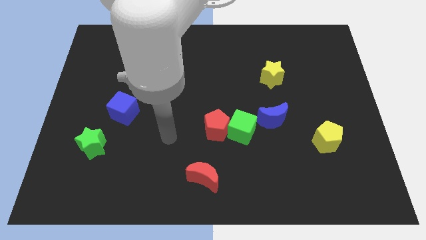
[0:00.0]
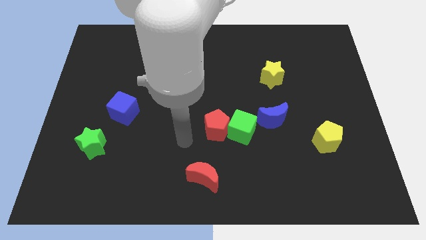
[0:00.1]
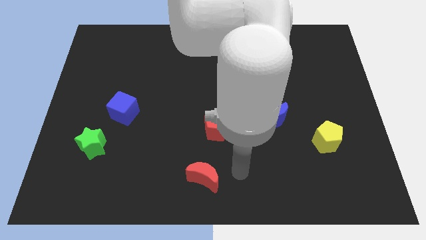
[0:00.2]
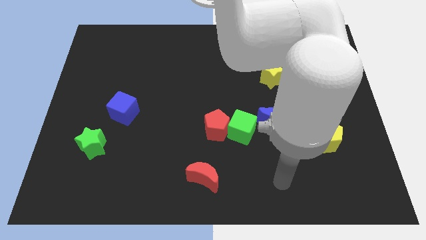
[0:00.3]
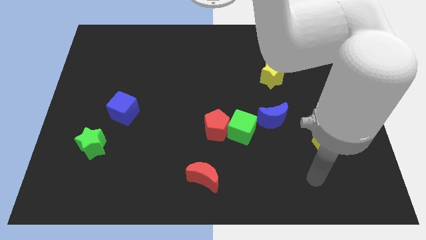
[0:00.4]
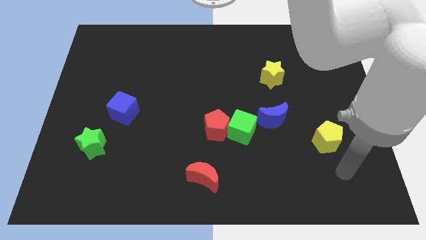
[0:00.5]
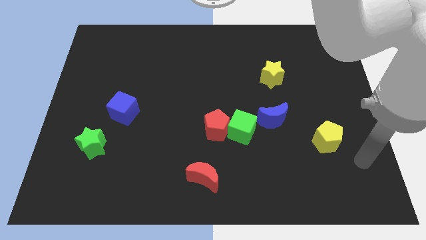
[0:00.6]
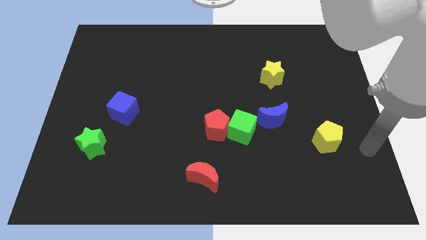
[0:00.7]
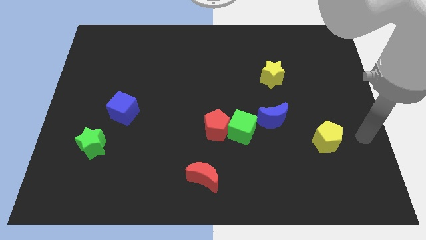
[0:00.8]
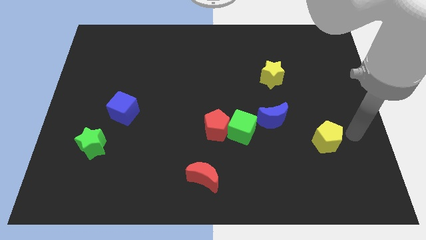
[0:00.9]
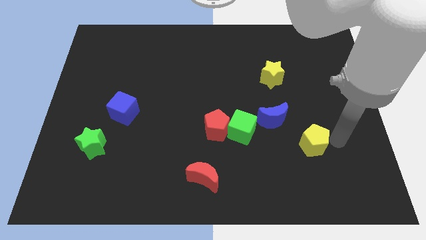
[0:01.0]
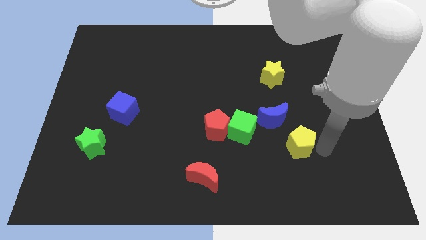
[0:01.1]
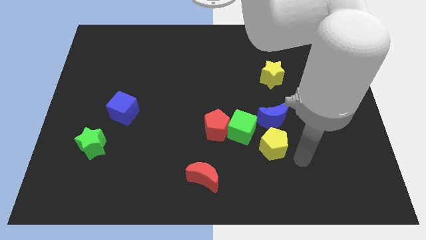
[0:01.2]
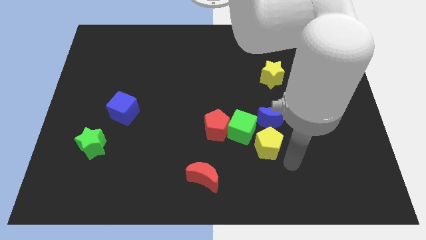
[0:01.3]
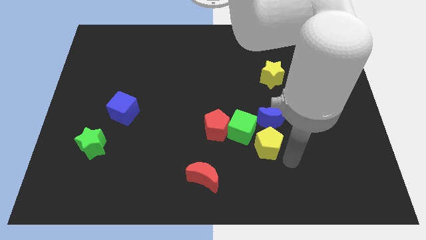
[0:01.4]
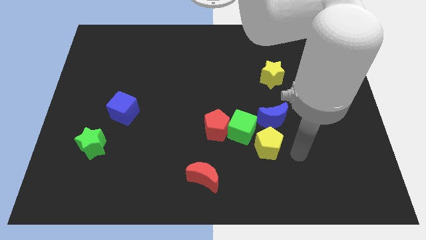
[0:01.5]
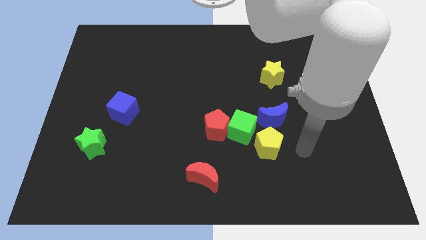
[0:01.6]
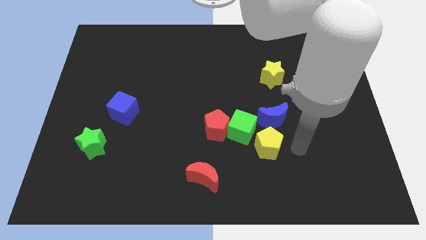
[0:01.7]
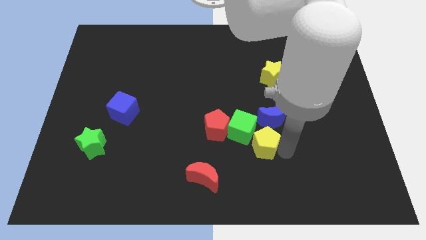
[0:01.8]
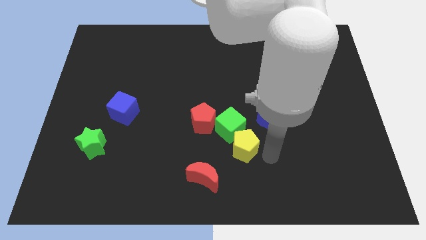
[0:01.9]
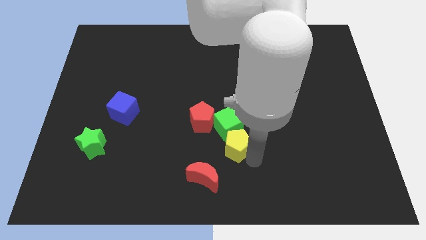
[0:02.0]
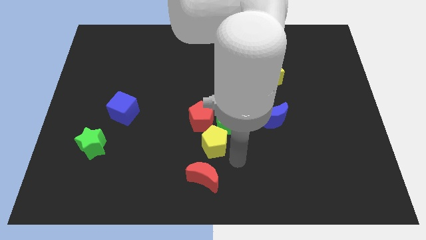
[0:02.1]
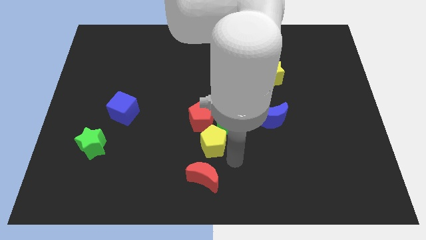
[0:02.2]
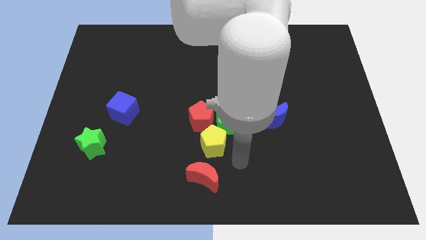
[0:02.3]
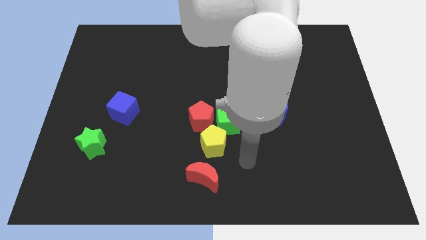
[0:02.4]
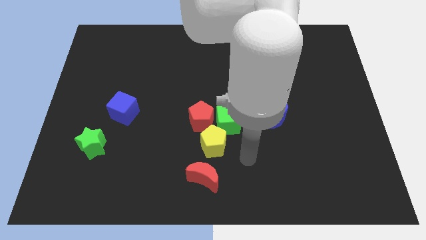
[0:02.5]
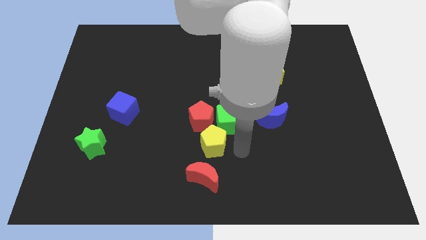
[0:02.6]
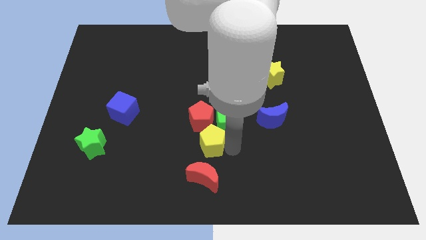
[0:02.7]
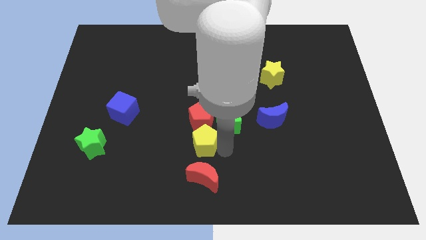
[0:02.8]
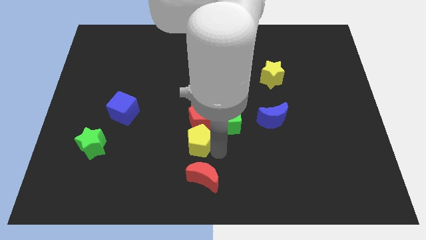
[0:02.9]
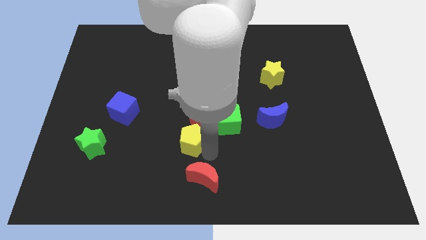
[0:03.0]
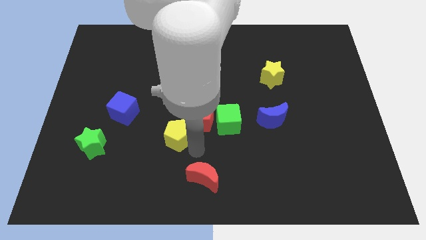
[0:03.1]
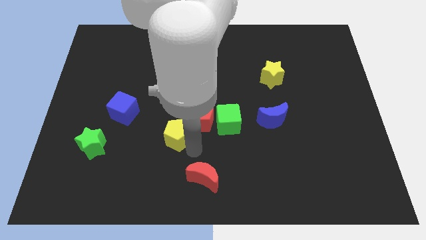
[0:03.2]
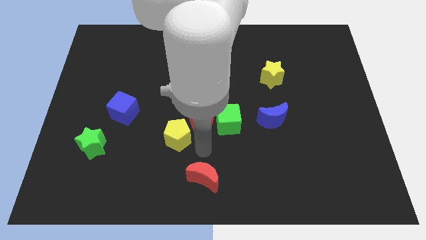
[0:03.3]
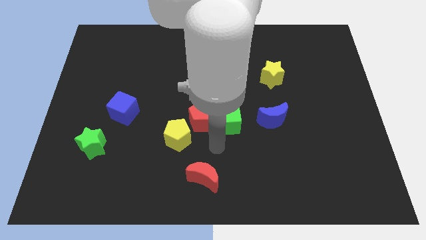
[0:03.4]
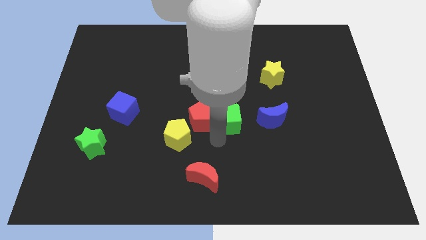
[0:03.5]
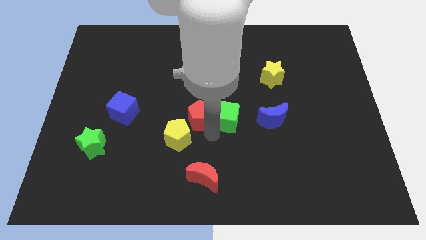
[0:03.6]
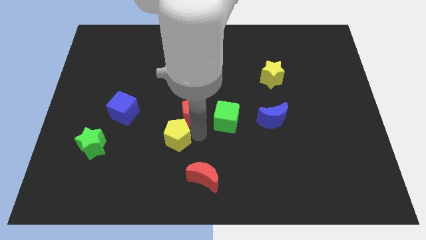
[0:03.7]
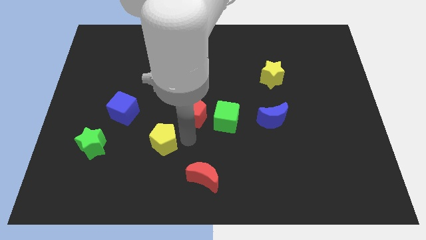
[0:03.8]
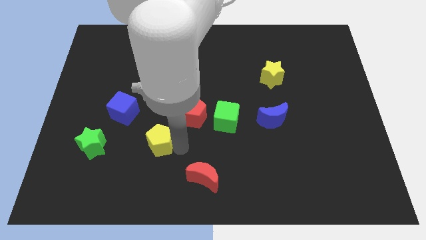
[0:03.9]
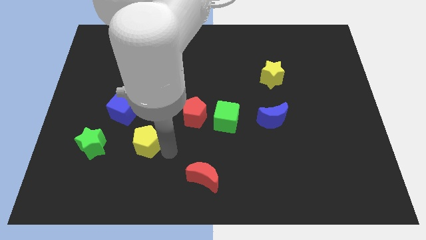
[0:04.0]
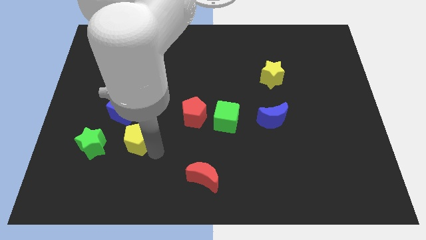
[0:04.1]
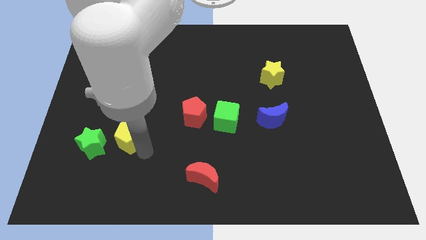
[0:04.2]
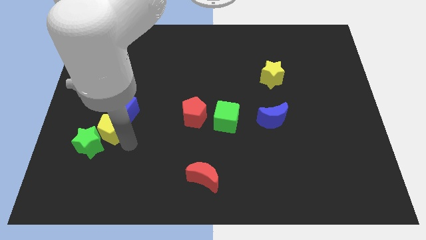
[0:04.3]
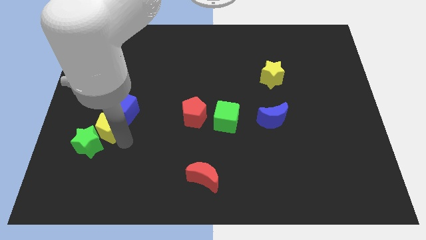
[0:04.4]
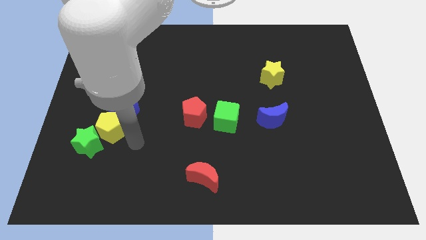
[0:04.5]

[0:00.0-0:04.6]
slide the yellow pentagon next to the green star

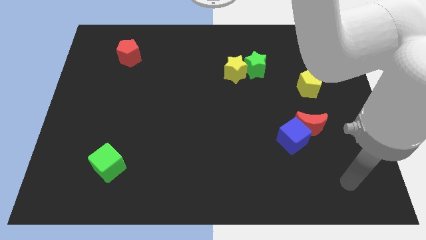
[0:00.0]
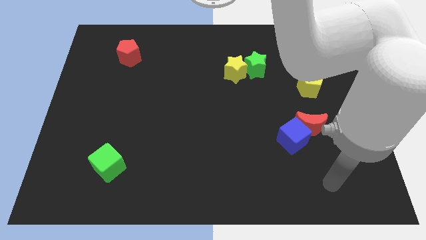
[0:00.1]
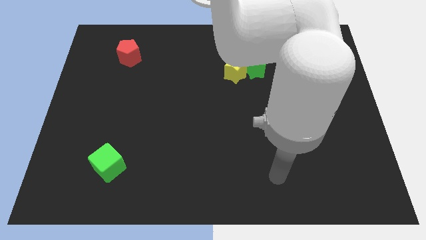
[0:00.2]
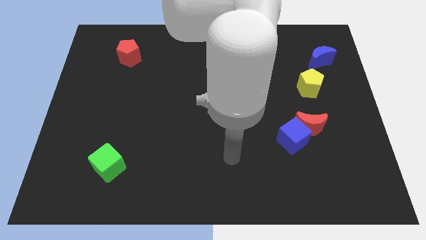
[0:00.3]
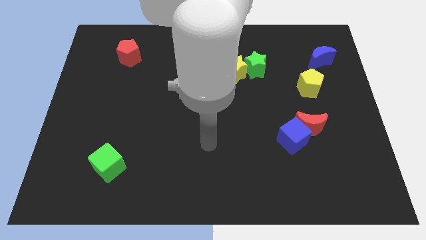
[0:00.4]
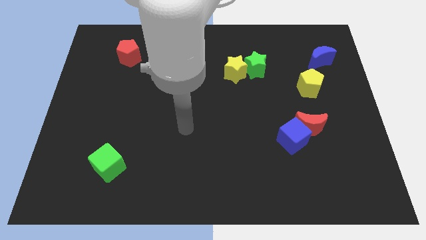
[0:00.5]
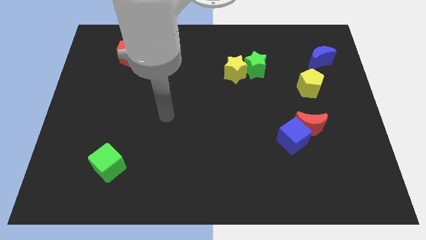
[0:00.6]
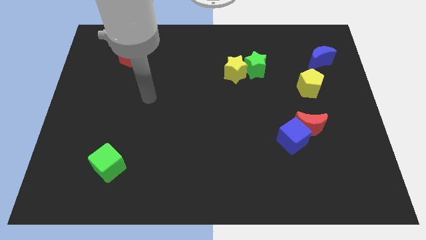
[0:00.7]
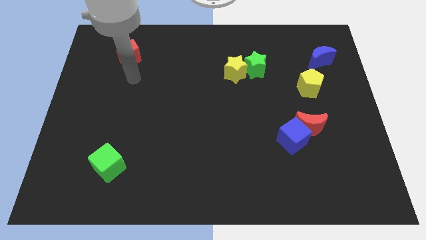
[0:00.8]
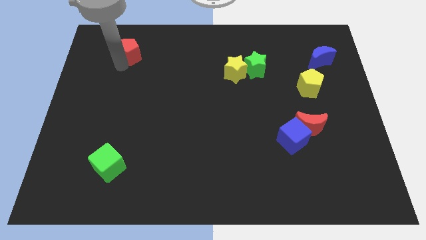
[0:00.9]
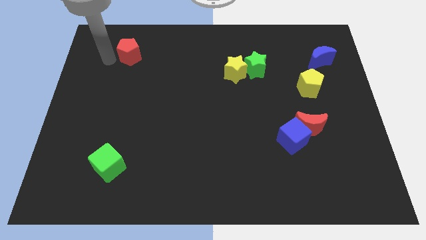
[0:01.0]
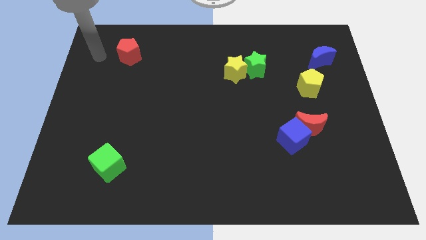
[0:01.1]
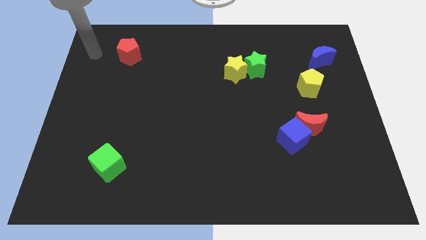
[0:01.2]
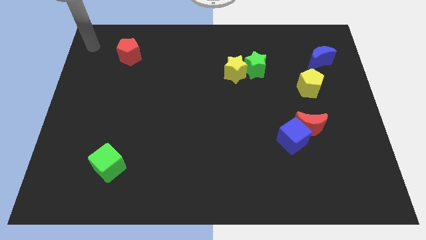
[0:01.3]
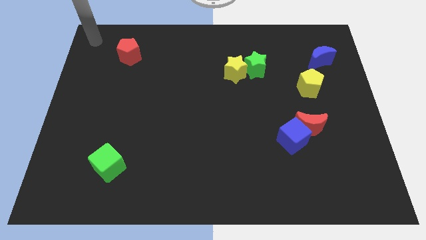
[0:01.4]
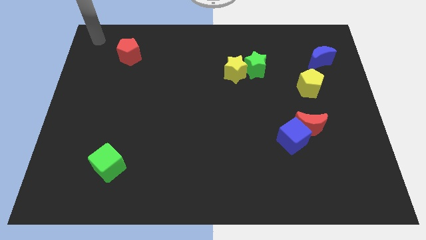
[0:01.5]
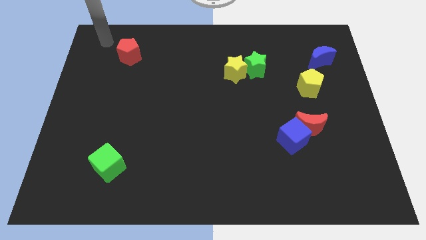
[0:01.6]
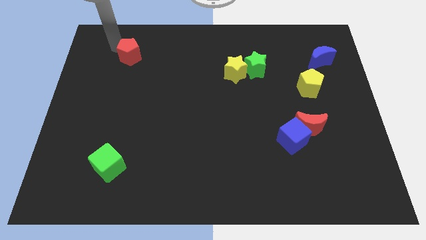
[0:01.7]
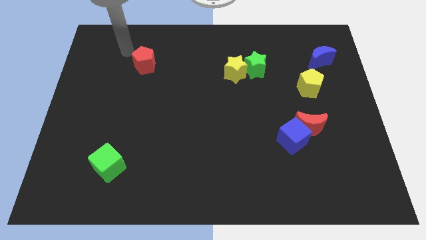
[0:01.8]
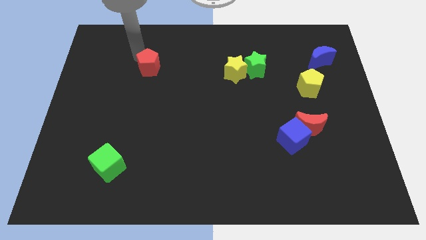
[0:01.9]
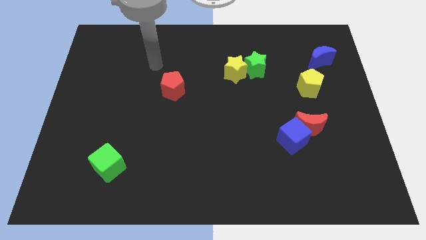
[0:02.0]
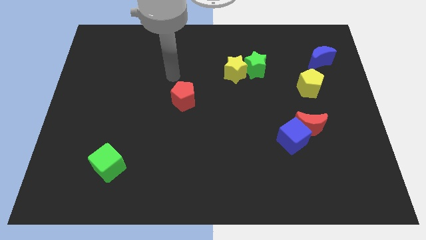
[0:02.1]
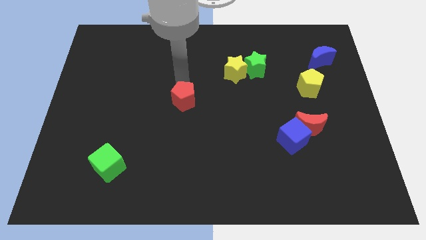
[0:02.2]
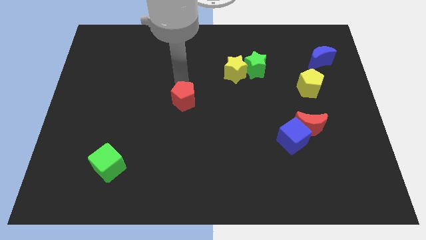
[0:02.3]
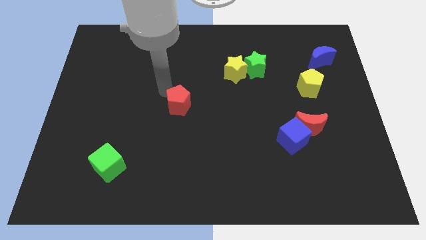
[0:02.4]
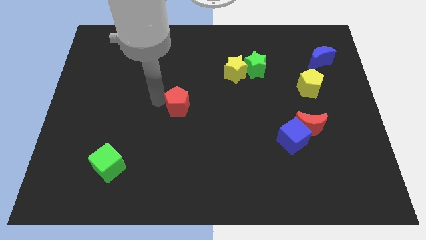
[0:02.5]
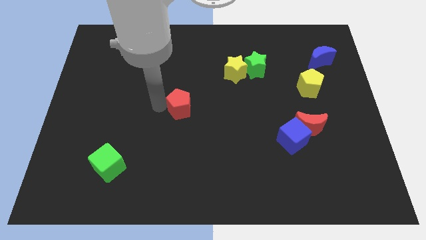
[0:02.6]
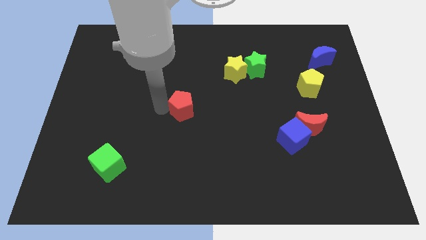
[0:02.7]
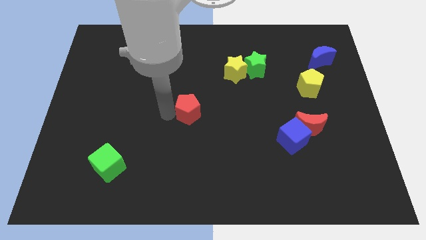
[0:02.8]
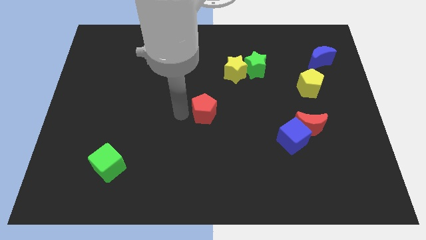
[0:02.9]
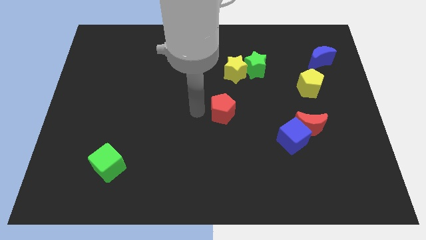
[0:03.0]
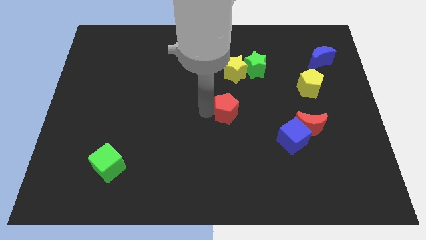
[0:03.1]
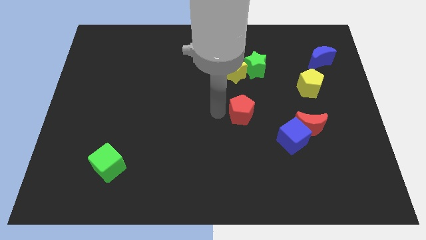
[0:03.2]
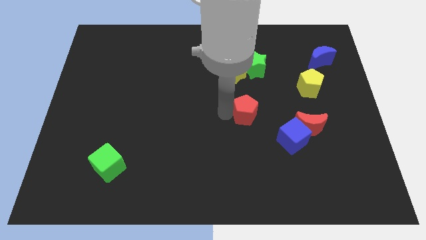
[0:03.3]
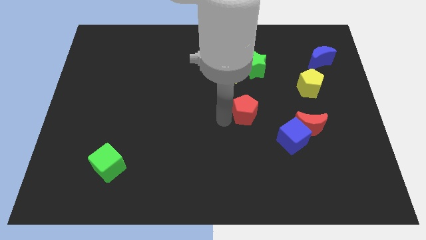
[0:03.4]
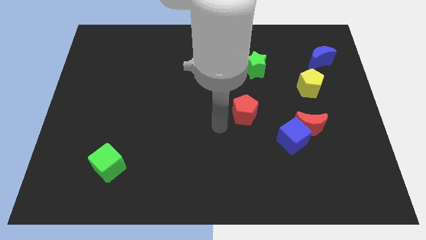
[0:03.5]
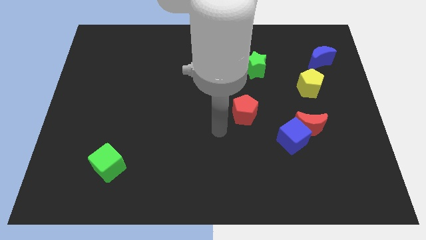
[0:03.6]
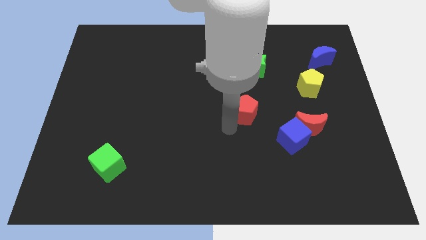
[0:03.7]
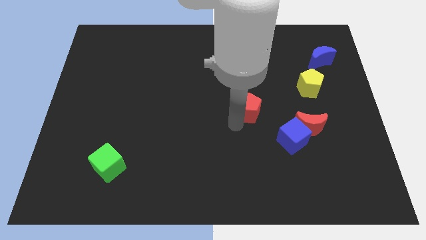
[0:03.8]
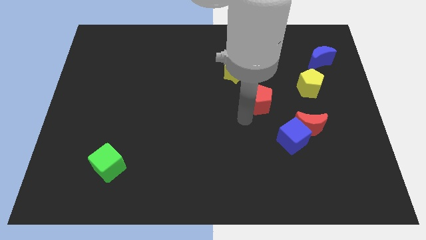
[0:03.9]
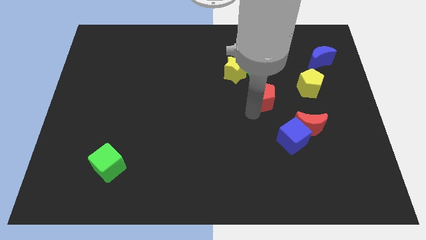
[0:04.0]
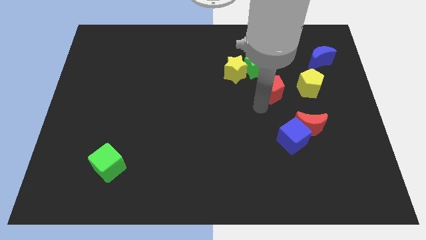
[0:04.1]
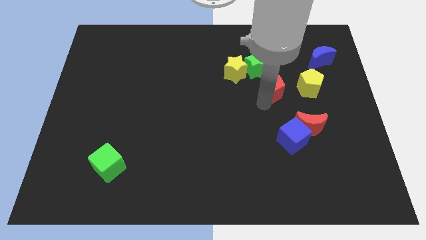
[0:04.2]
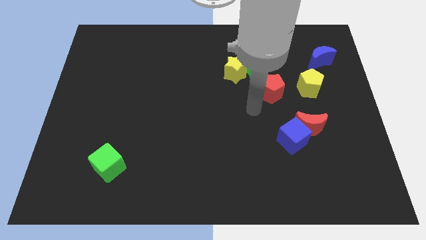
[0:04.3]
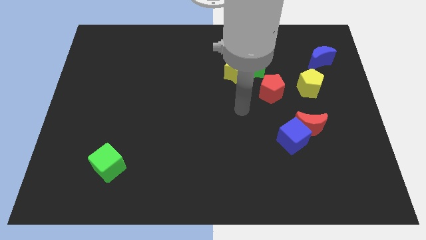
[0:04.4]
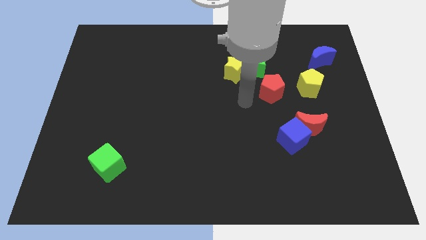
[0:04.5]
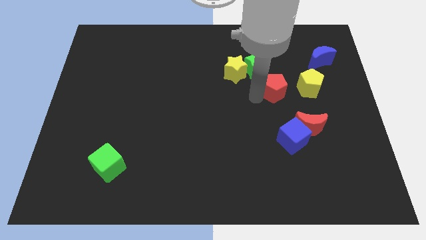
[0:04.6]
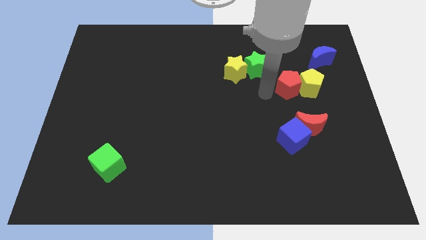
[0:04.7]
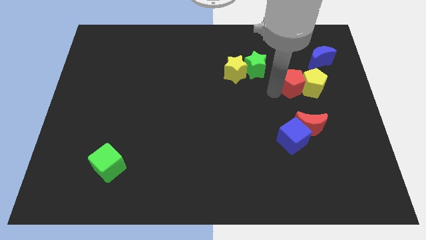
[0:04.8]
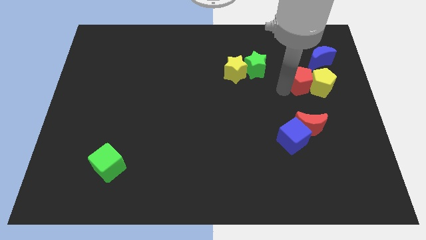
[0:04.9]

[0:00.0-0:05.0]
push the red pentagon close to the yellow pentagon
